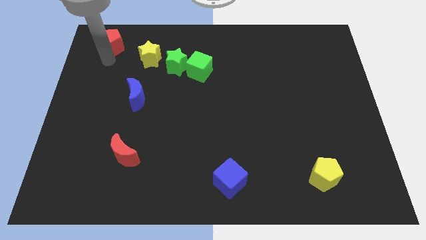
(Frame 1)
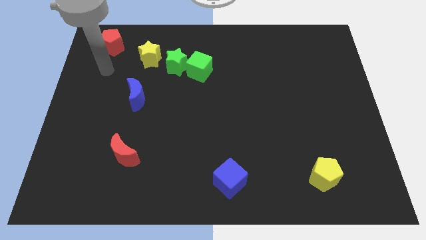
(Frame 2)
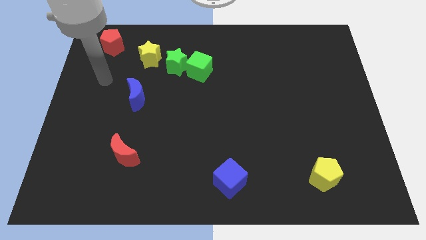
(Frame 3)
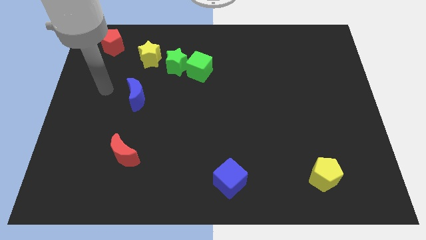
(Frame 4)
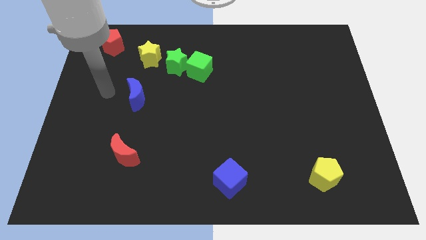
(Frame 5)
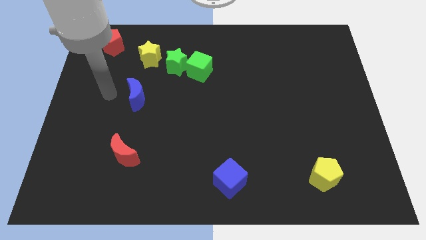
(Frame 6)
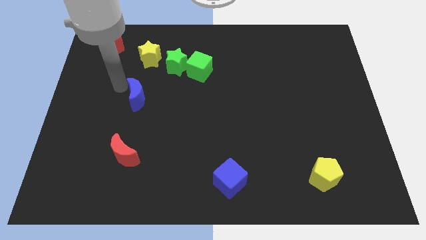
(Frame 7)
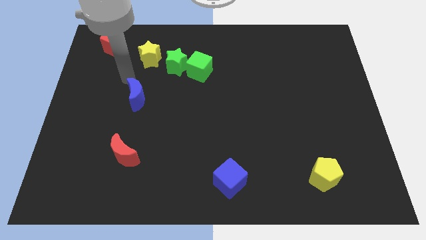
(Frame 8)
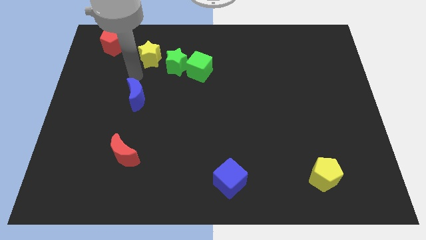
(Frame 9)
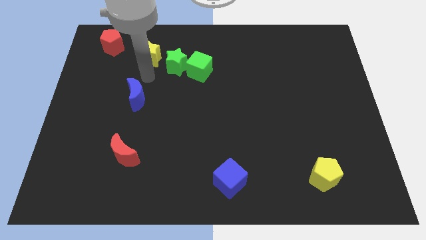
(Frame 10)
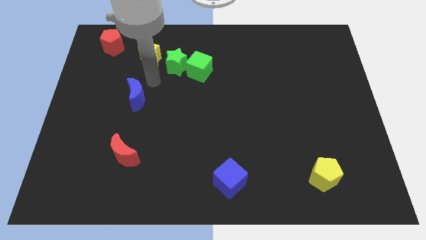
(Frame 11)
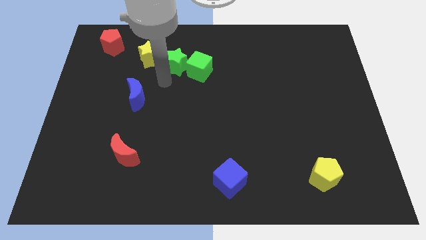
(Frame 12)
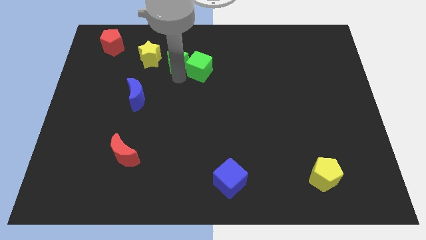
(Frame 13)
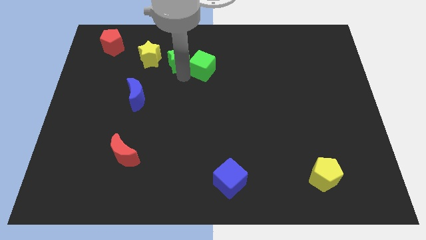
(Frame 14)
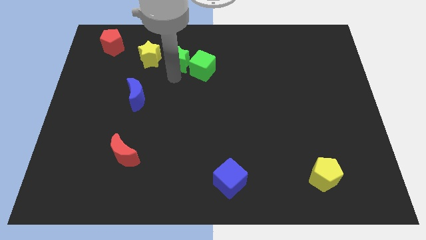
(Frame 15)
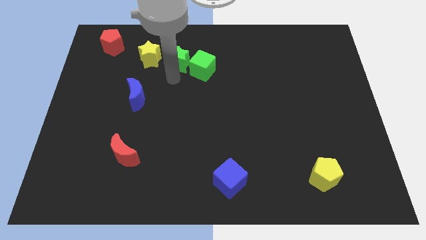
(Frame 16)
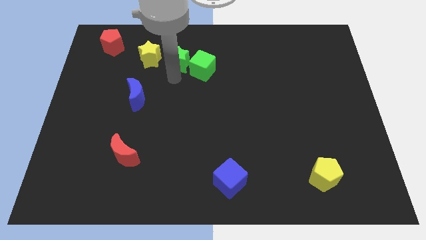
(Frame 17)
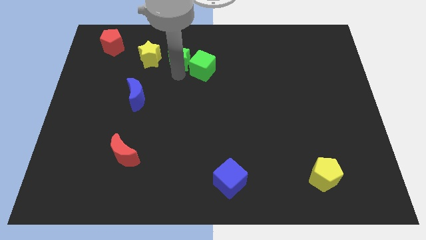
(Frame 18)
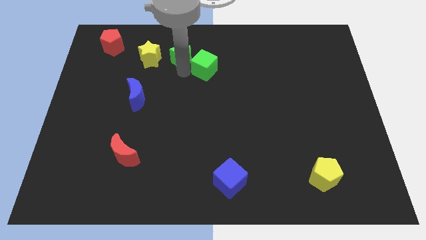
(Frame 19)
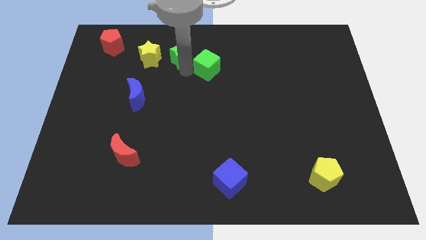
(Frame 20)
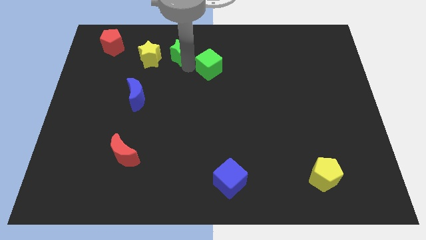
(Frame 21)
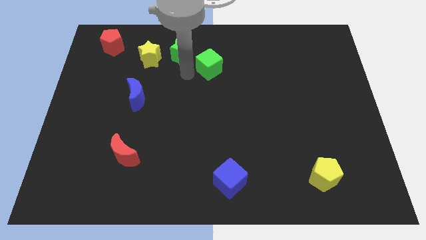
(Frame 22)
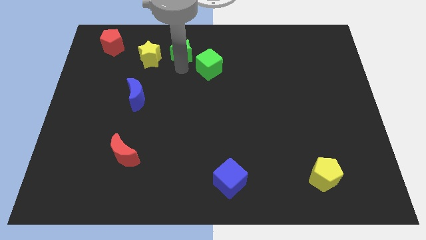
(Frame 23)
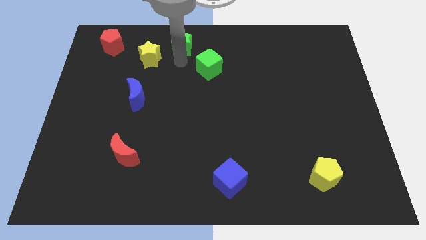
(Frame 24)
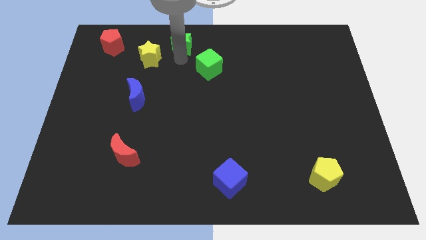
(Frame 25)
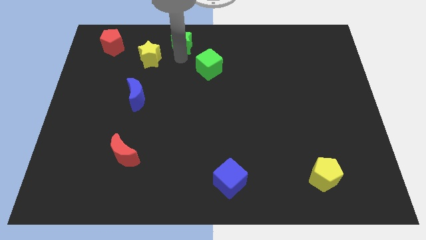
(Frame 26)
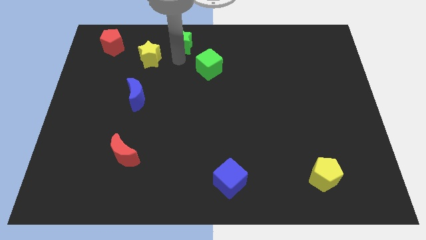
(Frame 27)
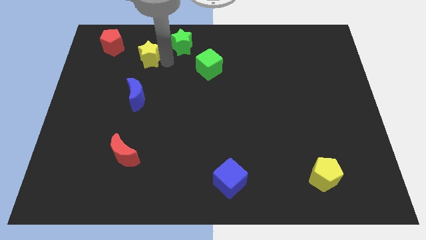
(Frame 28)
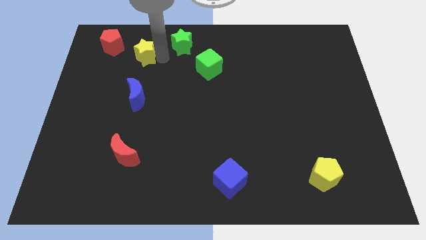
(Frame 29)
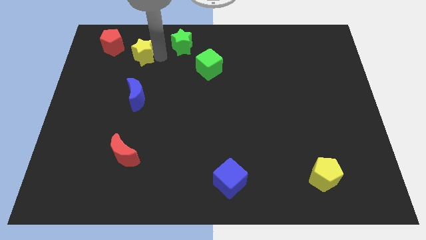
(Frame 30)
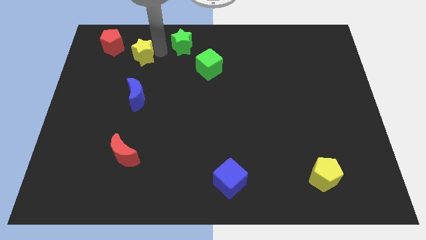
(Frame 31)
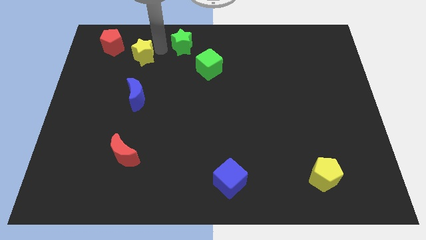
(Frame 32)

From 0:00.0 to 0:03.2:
separate the yellow and the green star

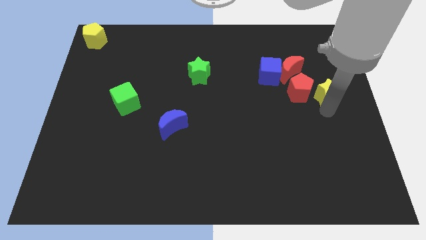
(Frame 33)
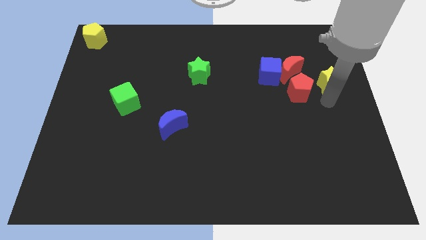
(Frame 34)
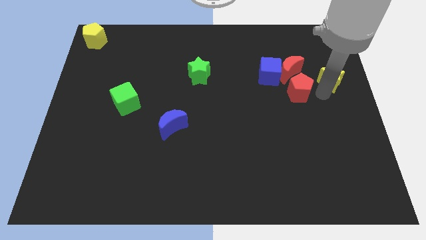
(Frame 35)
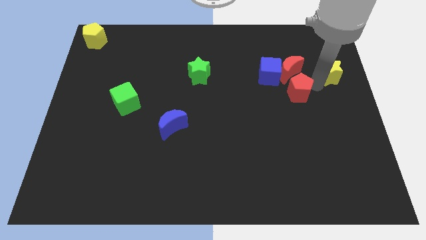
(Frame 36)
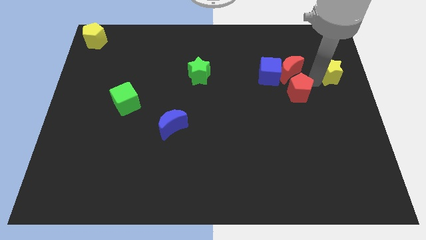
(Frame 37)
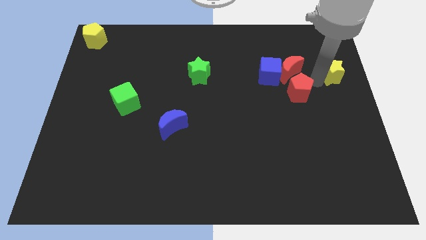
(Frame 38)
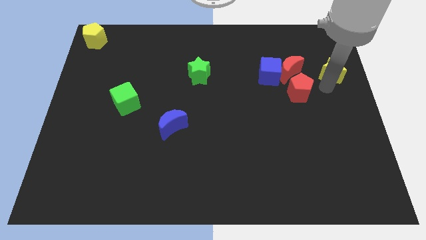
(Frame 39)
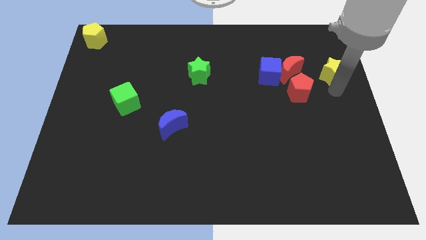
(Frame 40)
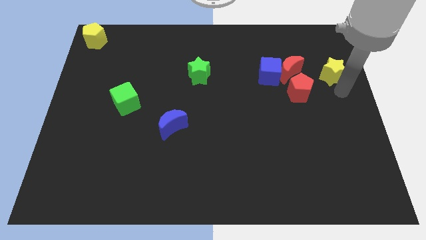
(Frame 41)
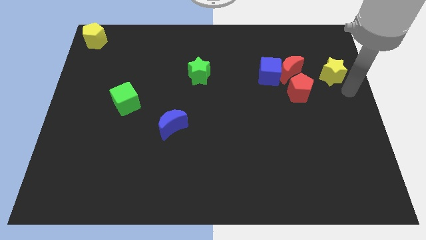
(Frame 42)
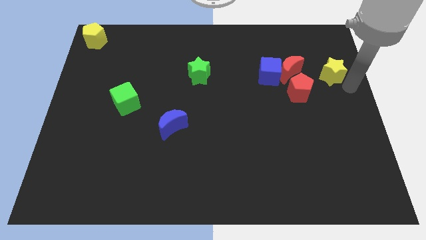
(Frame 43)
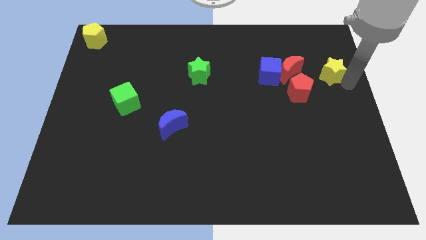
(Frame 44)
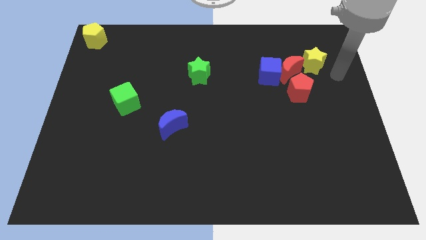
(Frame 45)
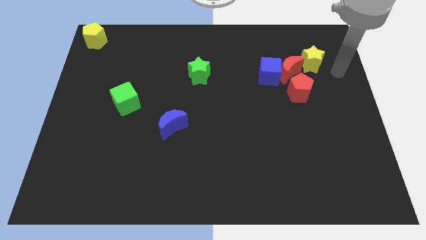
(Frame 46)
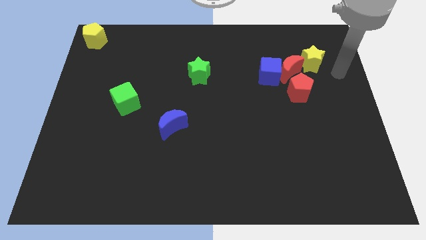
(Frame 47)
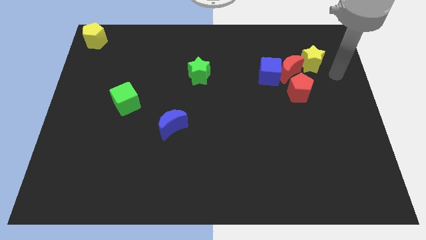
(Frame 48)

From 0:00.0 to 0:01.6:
move the yellow star to top right of red crescent

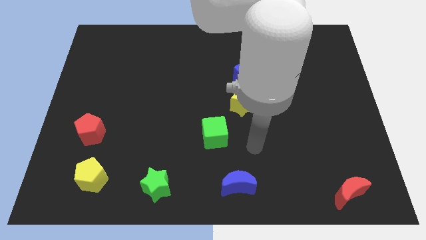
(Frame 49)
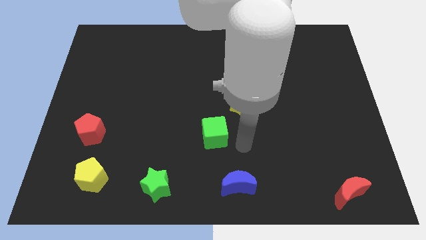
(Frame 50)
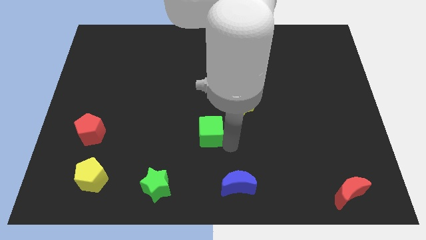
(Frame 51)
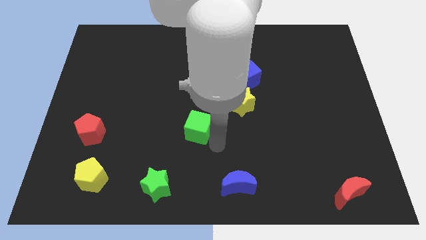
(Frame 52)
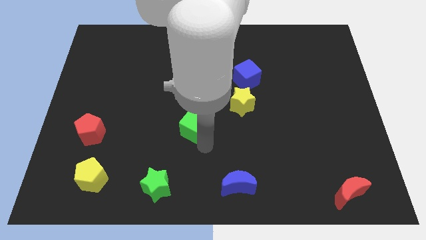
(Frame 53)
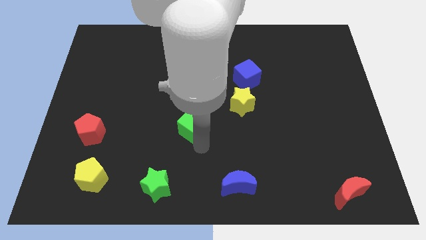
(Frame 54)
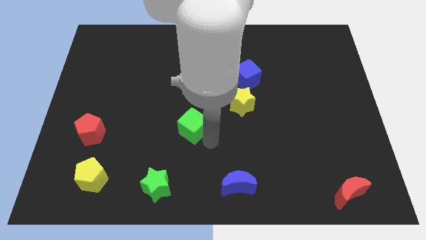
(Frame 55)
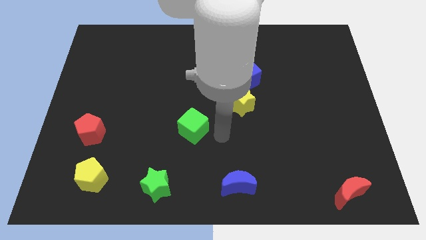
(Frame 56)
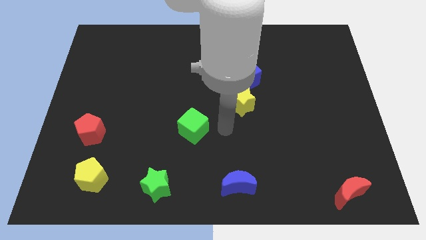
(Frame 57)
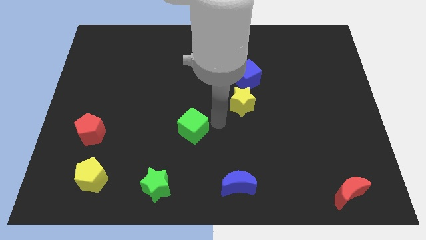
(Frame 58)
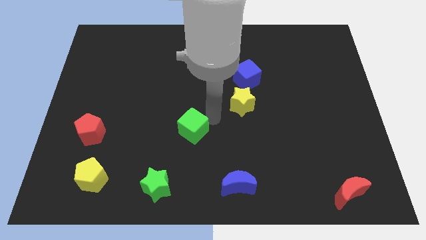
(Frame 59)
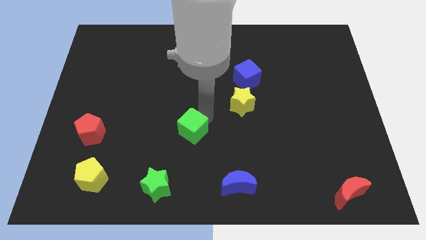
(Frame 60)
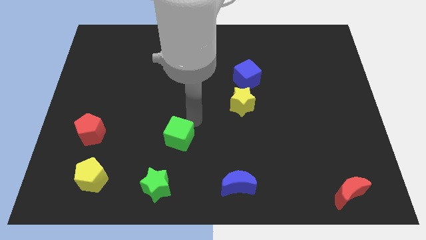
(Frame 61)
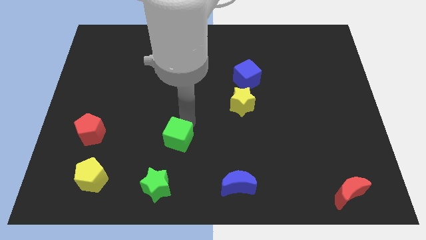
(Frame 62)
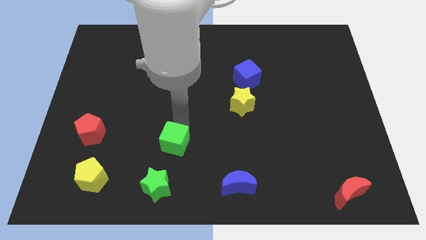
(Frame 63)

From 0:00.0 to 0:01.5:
slightly push the green cube towards the green star

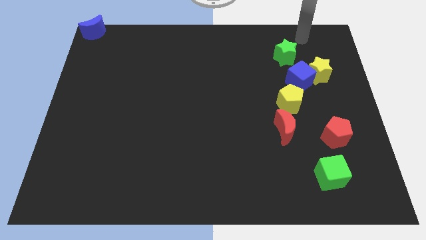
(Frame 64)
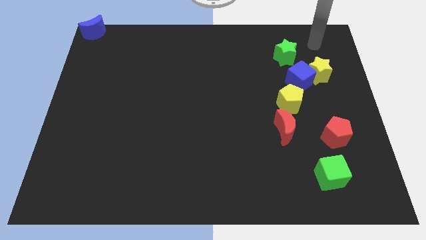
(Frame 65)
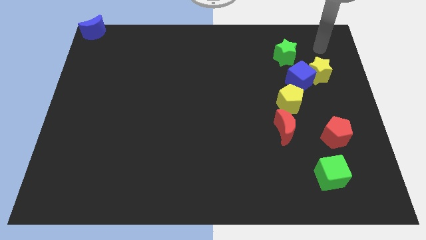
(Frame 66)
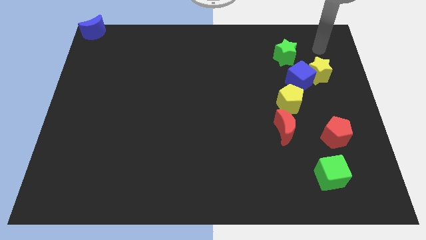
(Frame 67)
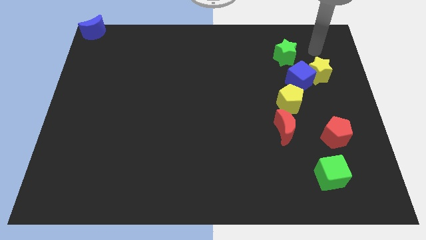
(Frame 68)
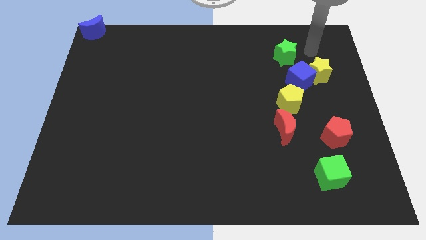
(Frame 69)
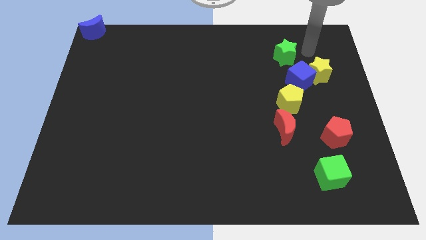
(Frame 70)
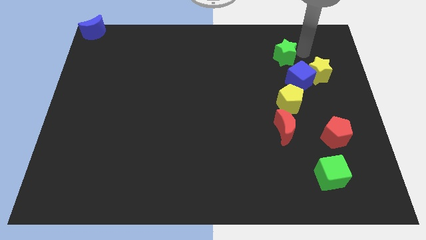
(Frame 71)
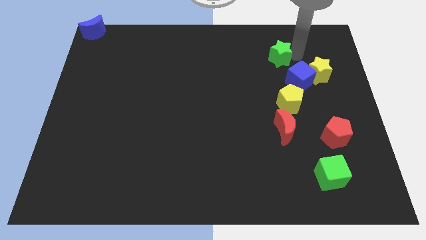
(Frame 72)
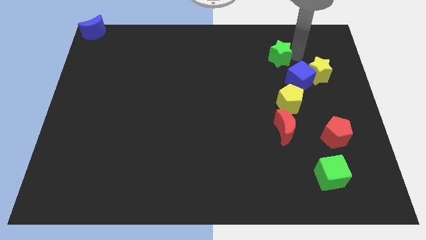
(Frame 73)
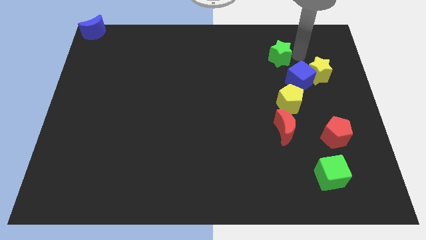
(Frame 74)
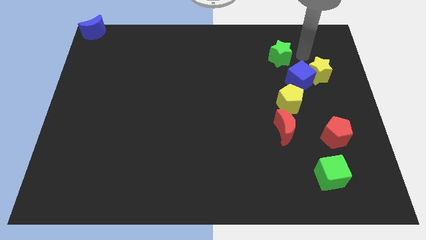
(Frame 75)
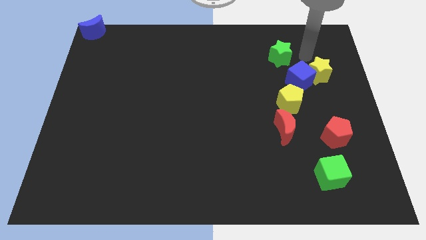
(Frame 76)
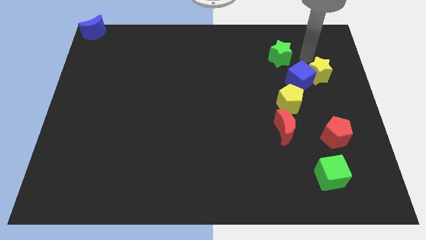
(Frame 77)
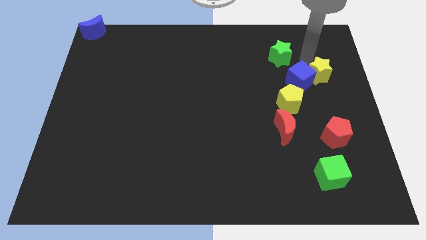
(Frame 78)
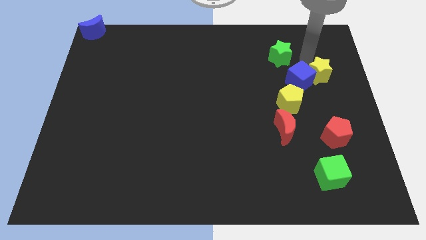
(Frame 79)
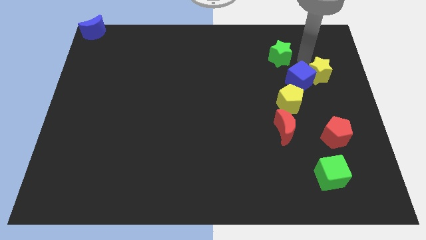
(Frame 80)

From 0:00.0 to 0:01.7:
separate the green star from blue cube

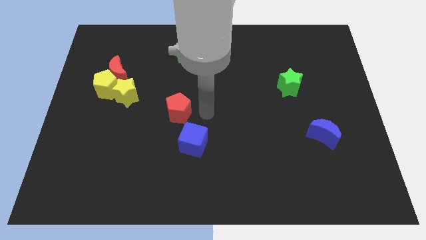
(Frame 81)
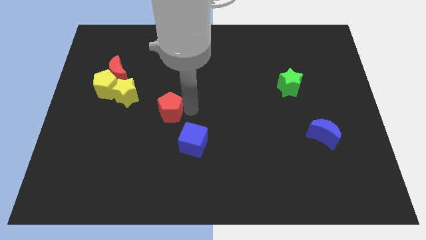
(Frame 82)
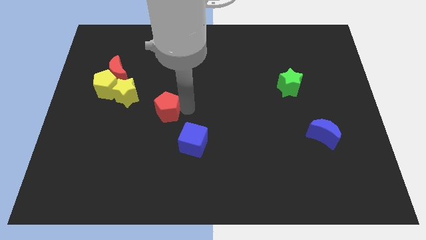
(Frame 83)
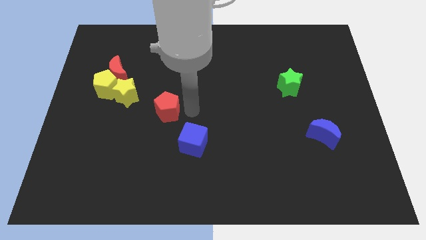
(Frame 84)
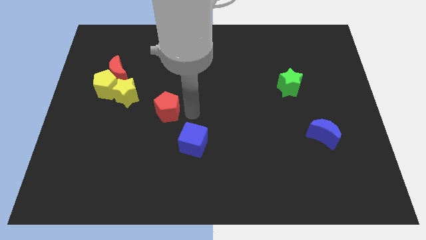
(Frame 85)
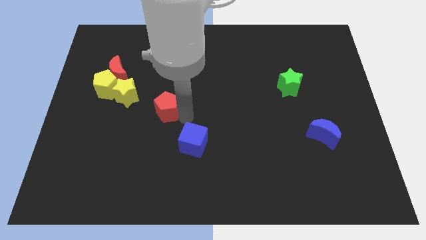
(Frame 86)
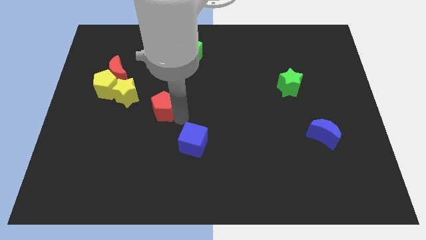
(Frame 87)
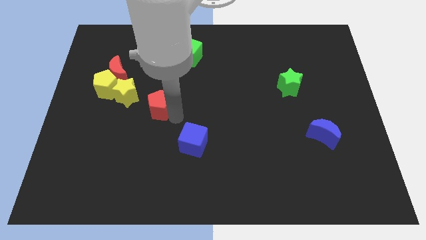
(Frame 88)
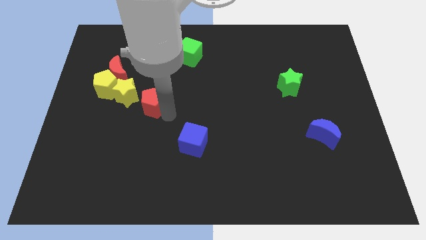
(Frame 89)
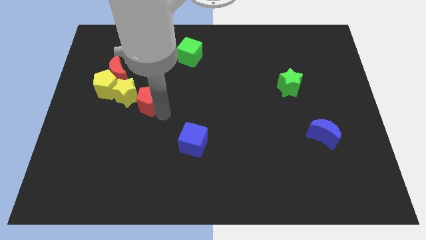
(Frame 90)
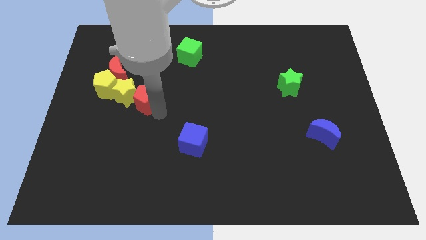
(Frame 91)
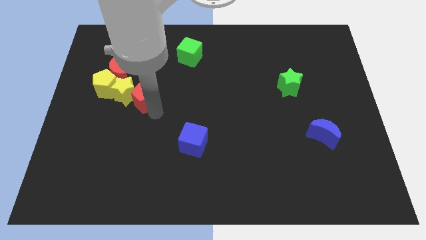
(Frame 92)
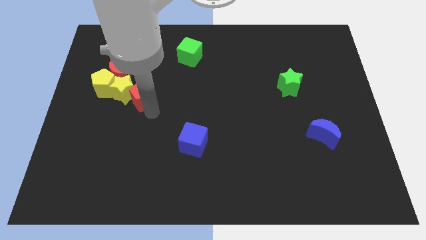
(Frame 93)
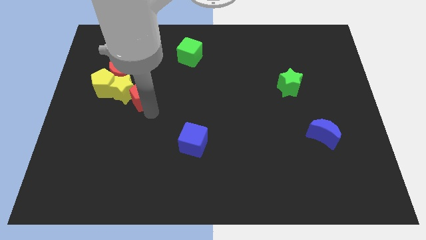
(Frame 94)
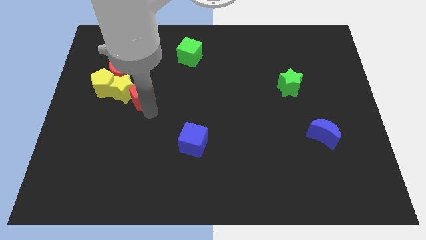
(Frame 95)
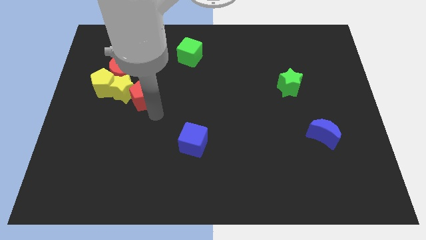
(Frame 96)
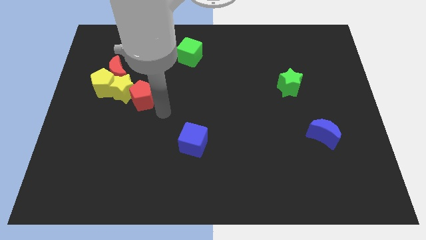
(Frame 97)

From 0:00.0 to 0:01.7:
slide the red pentagon into the yellow star
